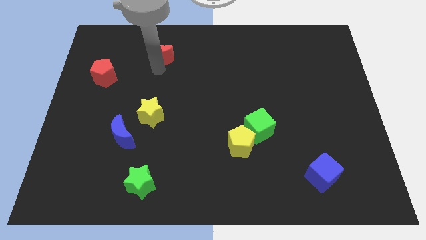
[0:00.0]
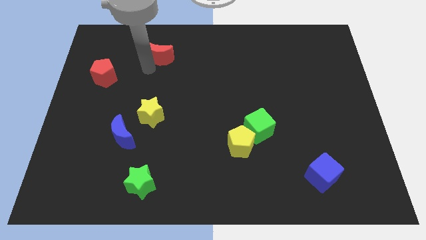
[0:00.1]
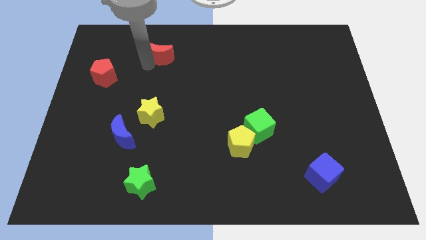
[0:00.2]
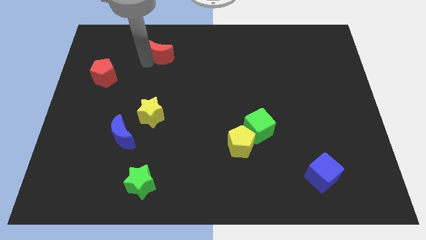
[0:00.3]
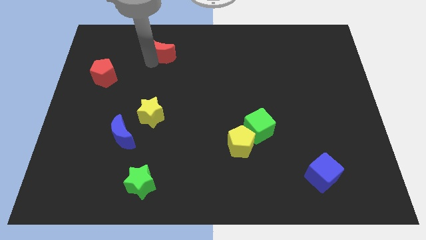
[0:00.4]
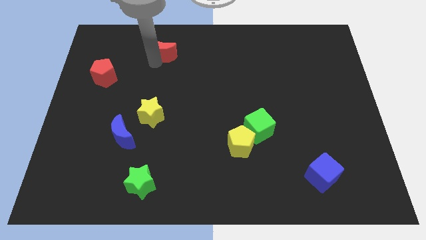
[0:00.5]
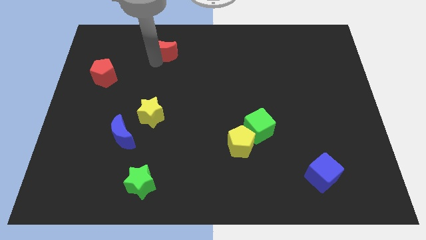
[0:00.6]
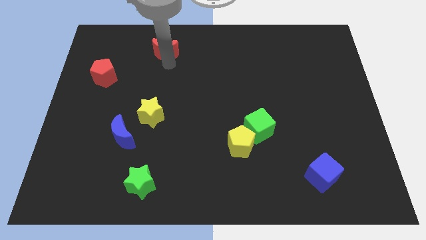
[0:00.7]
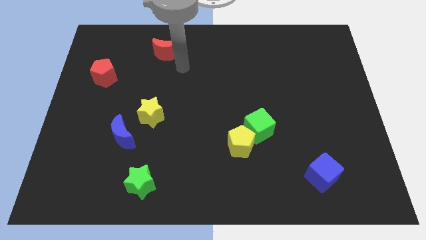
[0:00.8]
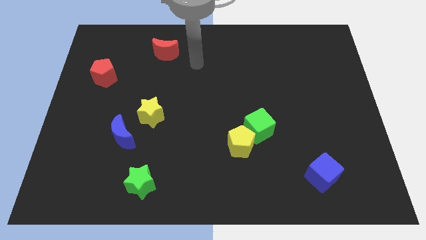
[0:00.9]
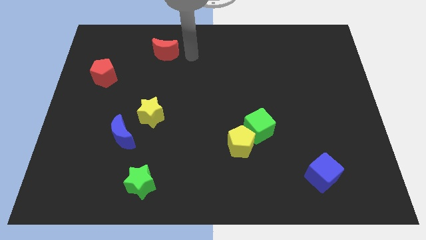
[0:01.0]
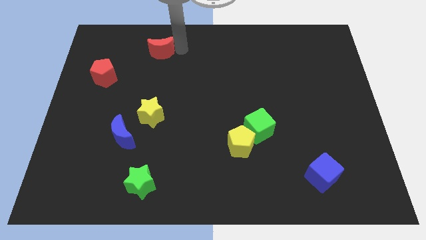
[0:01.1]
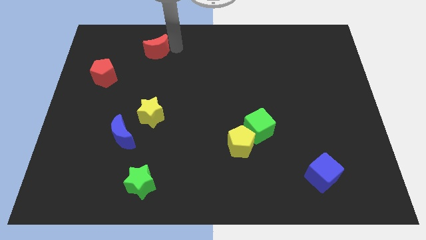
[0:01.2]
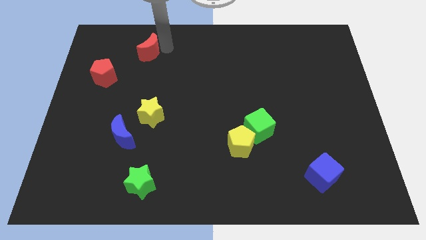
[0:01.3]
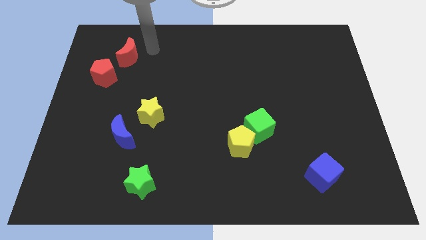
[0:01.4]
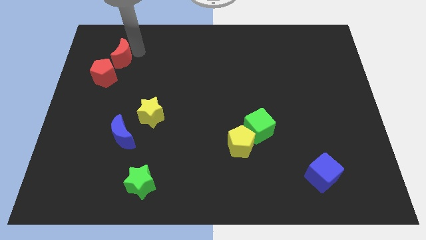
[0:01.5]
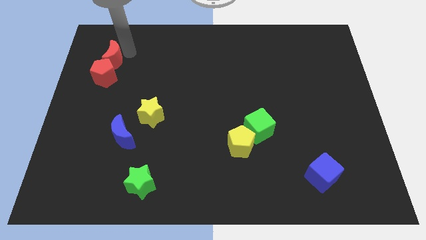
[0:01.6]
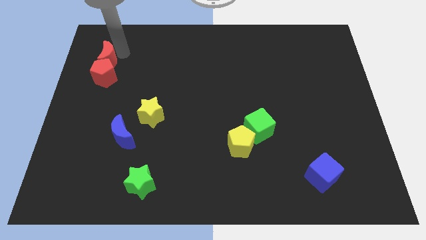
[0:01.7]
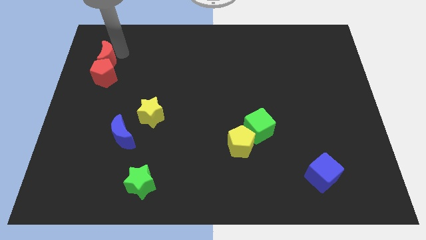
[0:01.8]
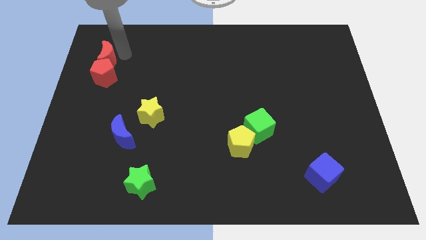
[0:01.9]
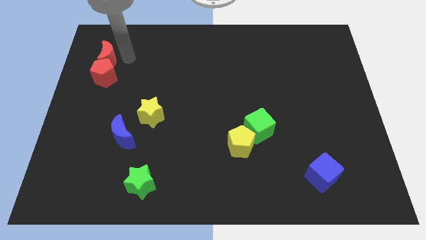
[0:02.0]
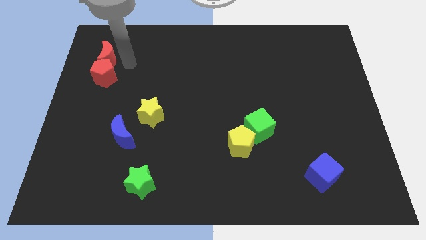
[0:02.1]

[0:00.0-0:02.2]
move the red crescent above the red pentagon

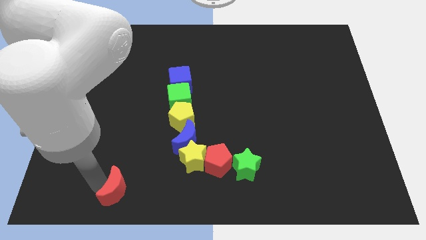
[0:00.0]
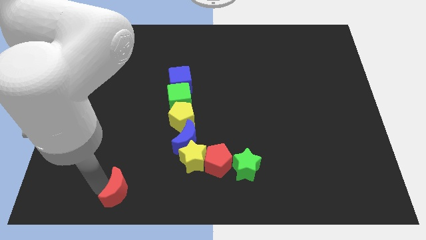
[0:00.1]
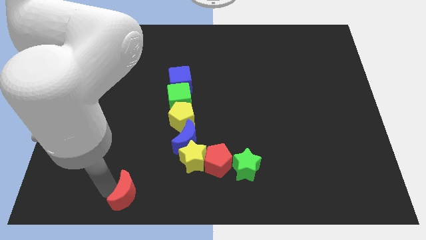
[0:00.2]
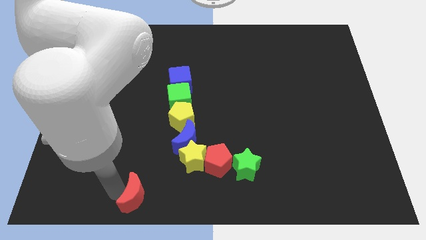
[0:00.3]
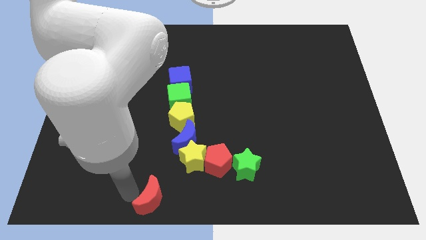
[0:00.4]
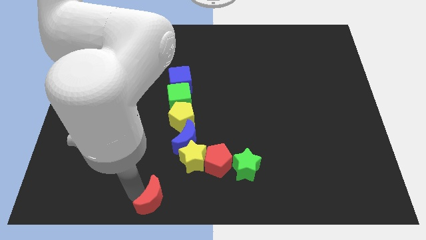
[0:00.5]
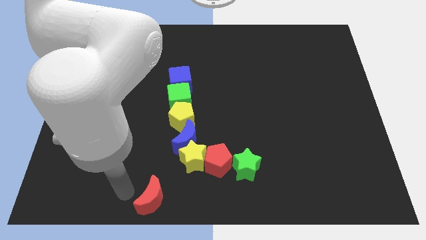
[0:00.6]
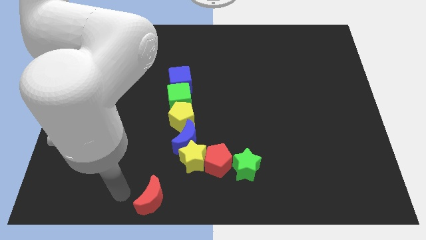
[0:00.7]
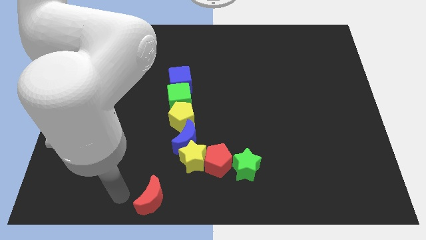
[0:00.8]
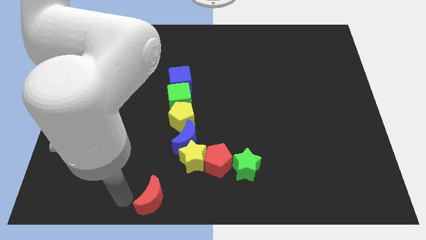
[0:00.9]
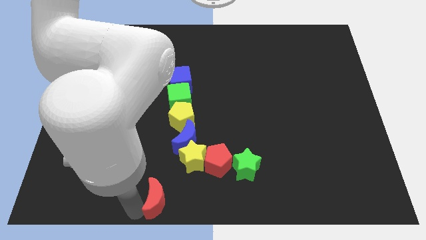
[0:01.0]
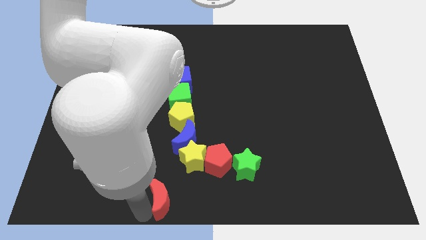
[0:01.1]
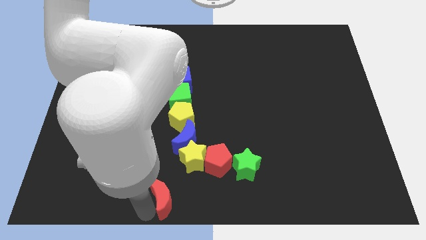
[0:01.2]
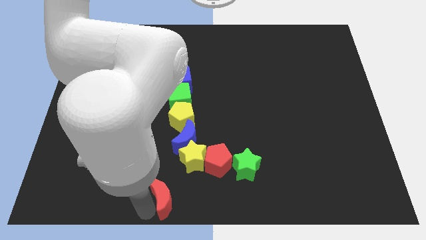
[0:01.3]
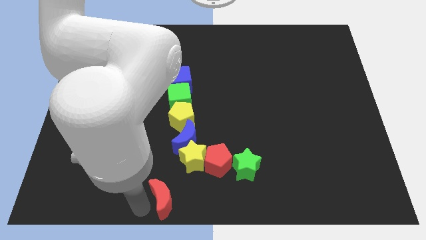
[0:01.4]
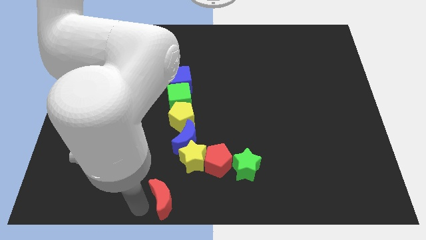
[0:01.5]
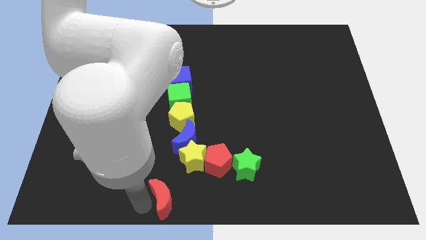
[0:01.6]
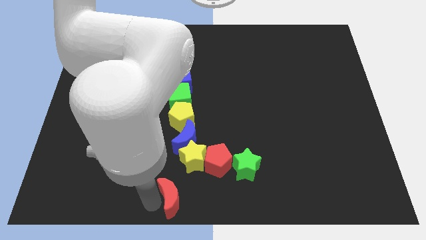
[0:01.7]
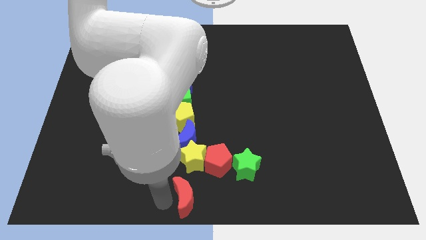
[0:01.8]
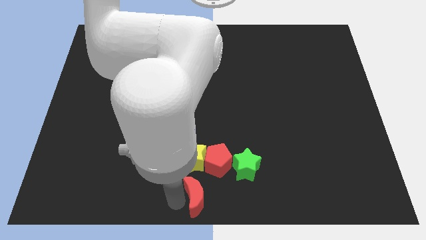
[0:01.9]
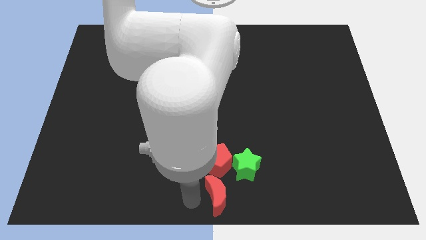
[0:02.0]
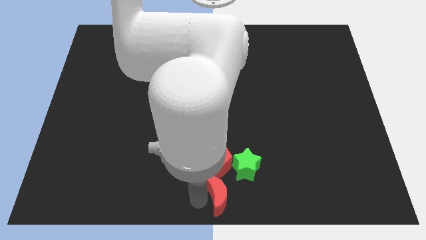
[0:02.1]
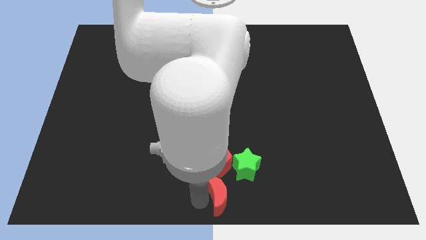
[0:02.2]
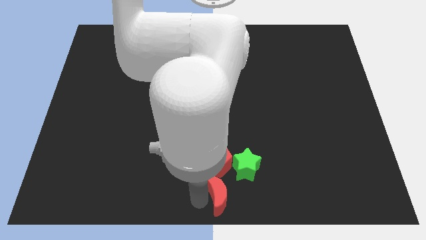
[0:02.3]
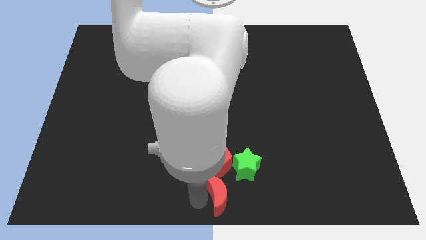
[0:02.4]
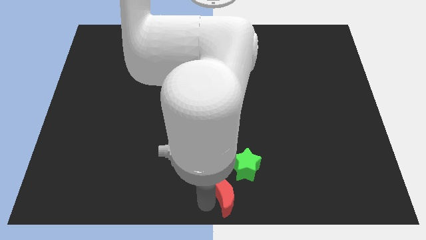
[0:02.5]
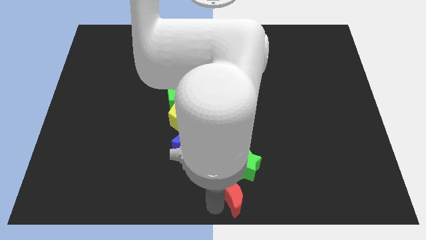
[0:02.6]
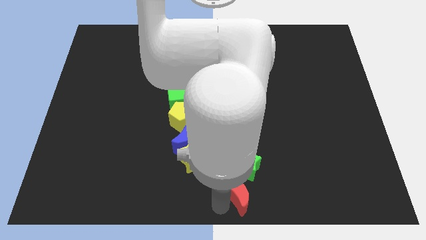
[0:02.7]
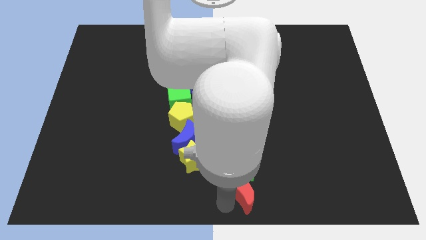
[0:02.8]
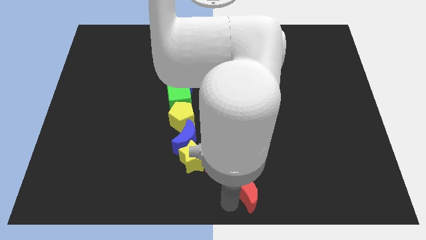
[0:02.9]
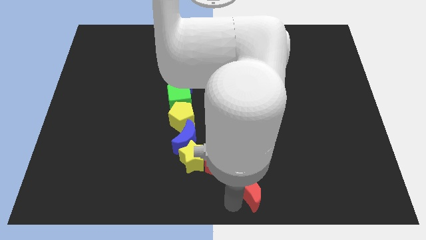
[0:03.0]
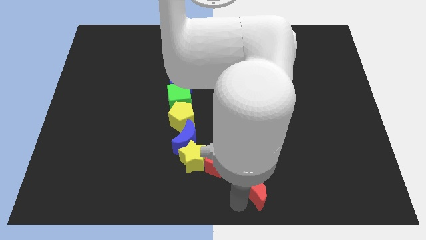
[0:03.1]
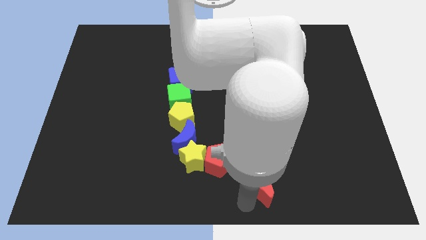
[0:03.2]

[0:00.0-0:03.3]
place the red moon down to the green star

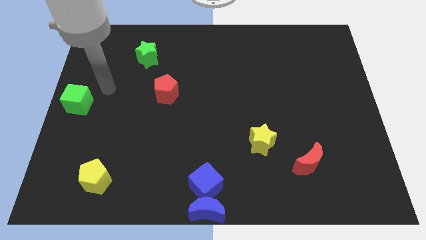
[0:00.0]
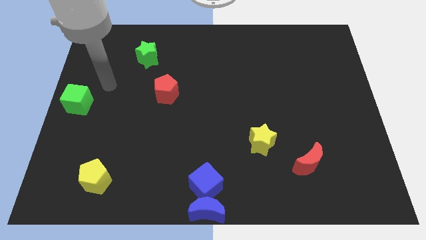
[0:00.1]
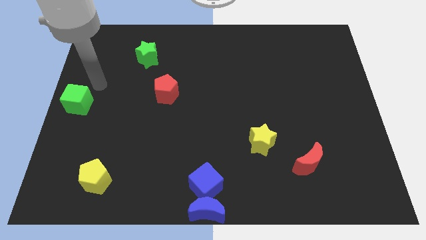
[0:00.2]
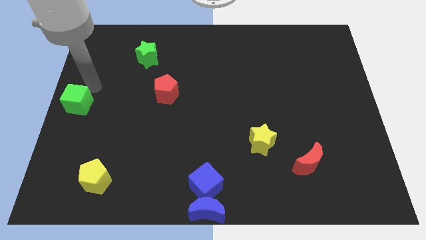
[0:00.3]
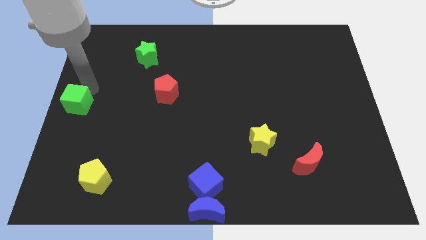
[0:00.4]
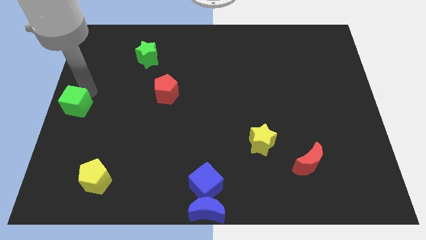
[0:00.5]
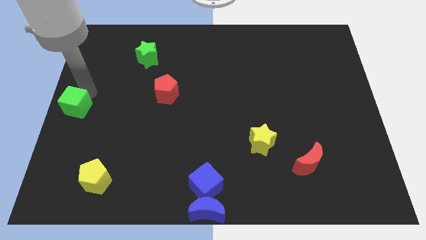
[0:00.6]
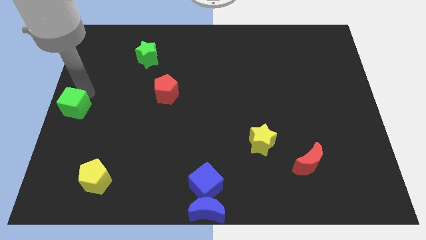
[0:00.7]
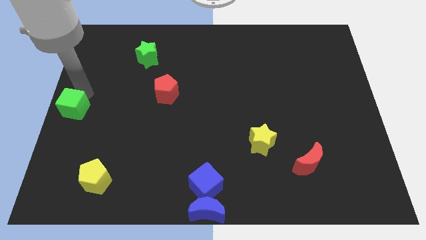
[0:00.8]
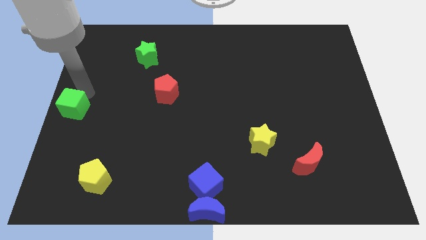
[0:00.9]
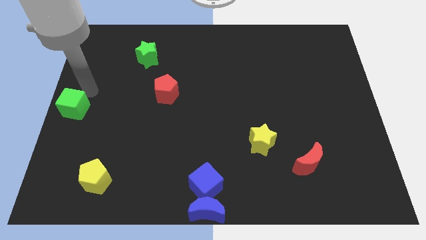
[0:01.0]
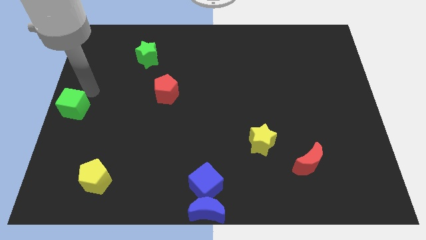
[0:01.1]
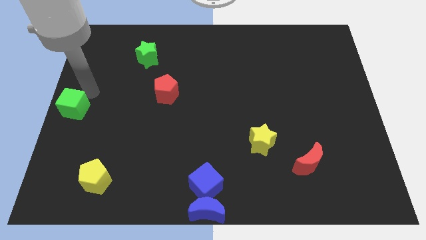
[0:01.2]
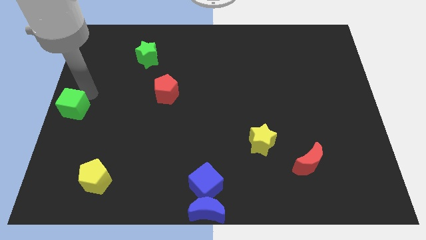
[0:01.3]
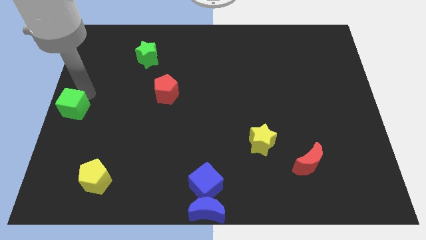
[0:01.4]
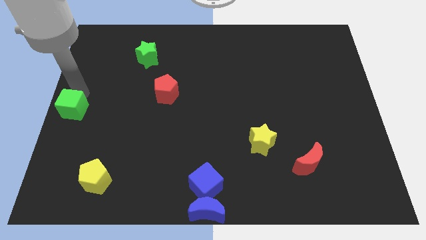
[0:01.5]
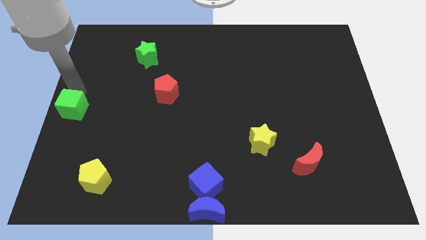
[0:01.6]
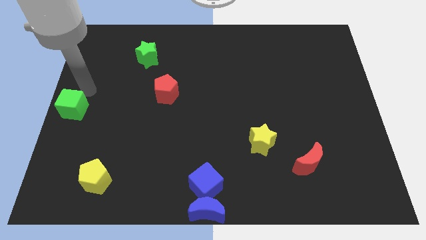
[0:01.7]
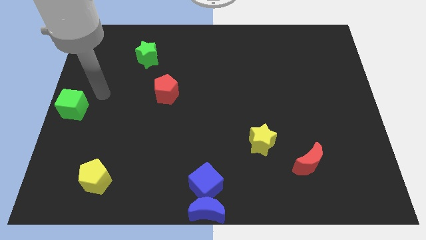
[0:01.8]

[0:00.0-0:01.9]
slightly push the green cube to the left

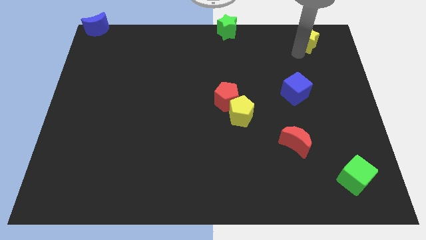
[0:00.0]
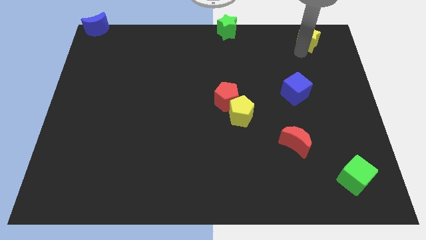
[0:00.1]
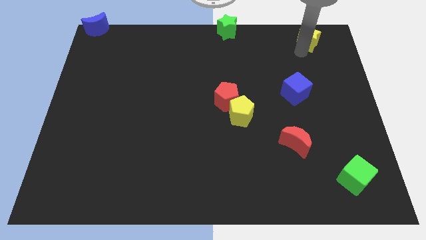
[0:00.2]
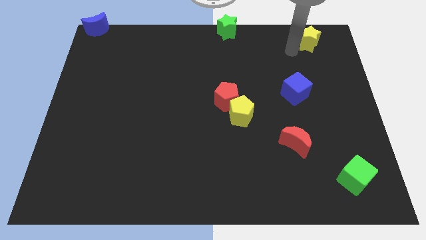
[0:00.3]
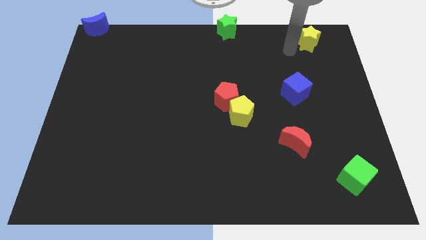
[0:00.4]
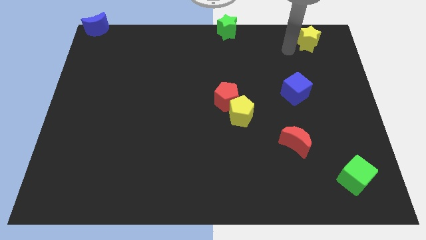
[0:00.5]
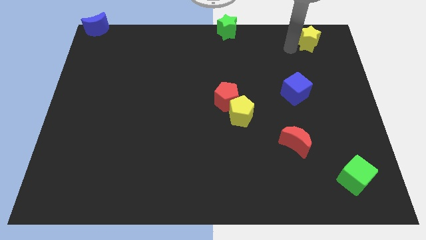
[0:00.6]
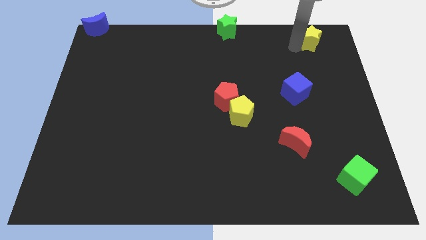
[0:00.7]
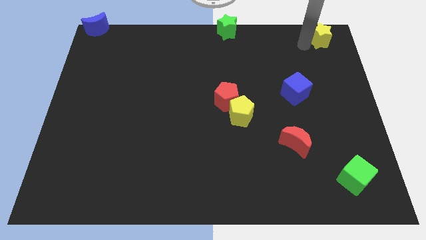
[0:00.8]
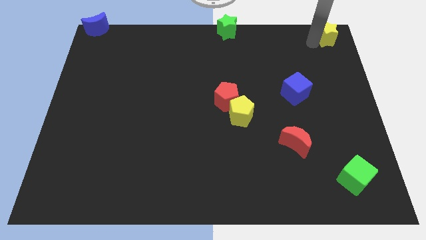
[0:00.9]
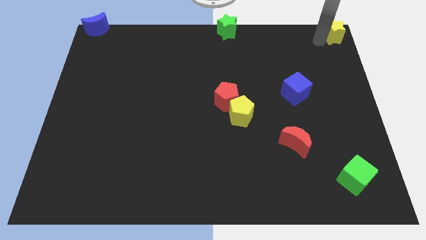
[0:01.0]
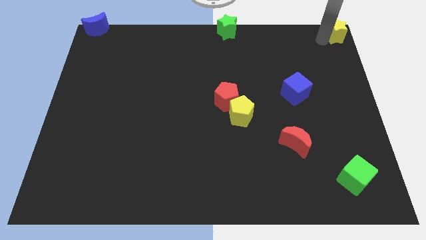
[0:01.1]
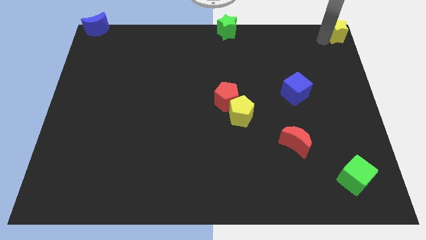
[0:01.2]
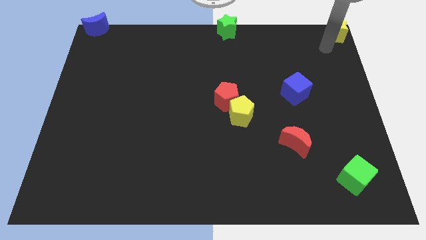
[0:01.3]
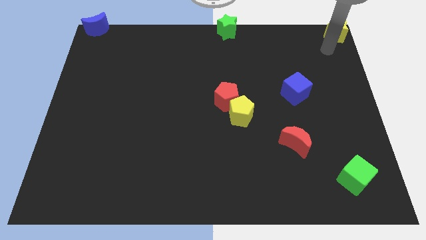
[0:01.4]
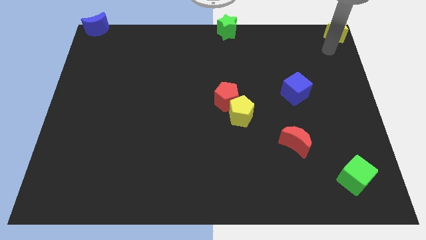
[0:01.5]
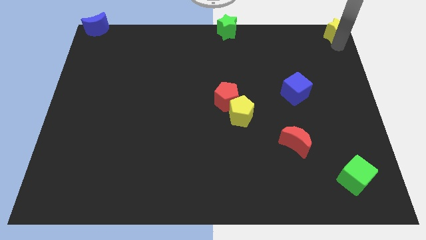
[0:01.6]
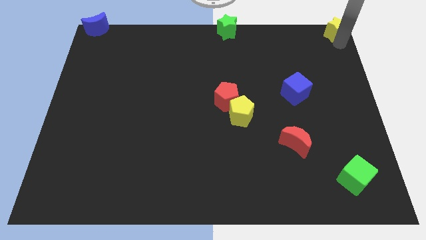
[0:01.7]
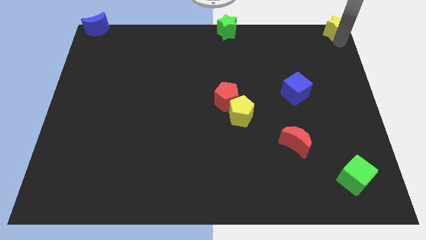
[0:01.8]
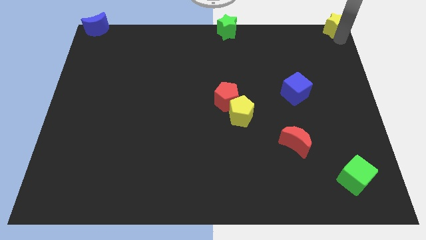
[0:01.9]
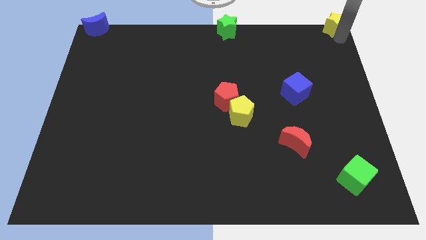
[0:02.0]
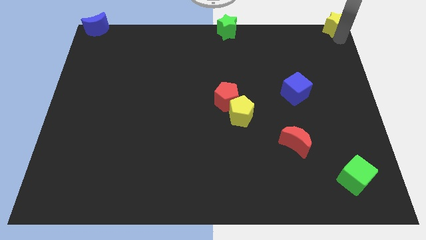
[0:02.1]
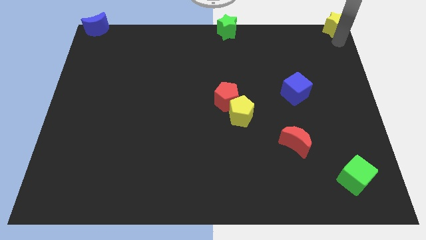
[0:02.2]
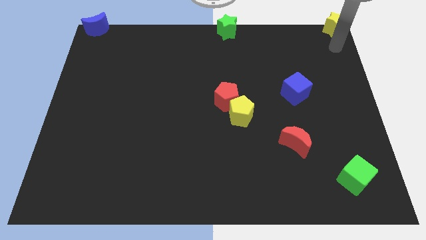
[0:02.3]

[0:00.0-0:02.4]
put the yellow star to the top right corner
